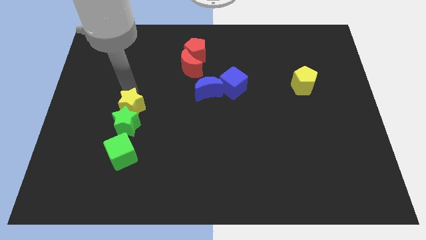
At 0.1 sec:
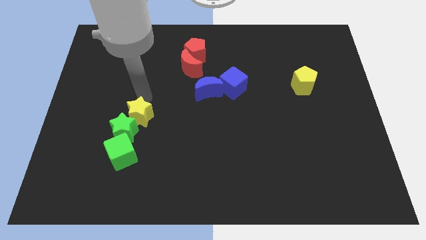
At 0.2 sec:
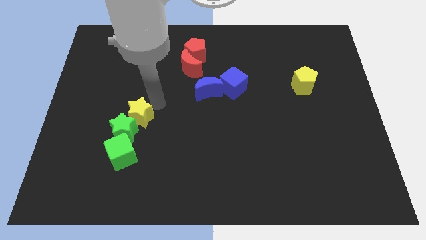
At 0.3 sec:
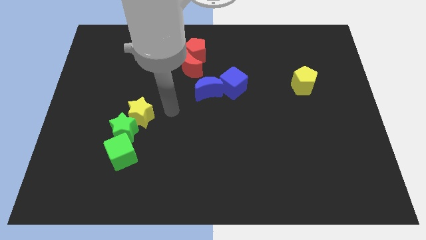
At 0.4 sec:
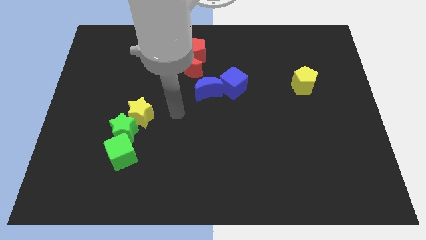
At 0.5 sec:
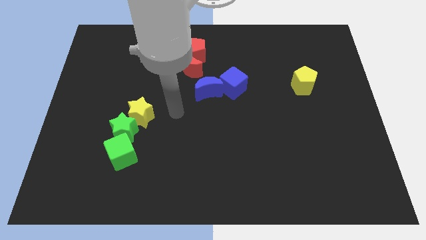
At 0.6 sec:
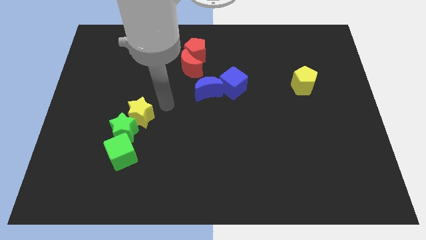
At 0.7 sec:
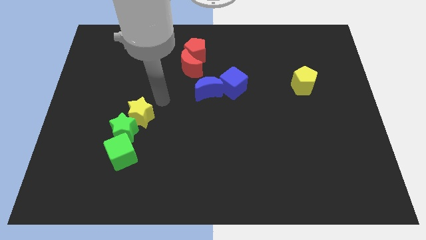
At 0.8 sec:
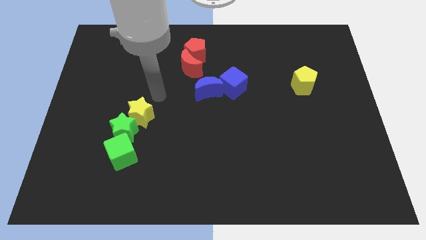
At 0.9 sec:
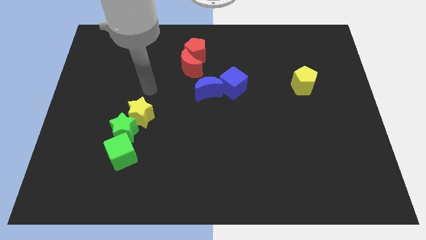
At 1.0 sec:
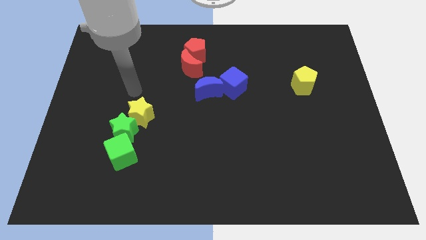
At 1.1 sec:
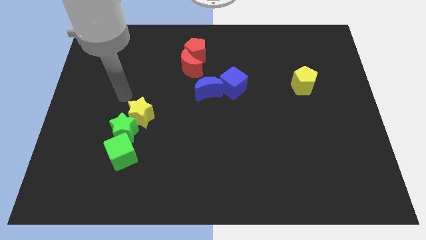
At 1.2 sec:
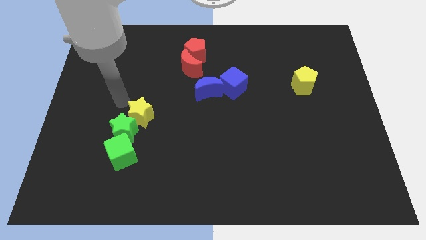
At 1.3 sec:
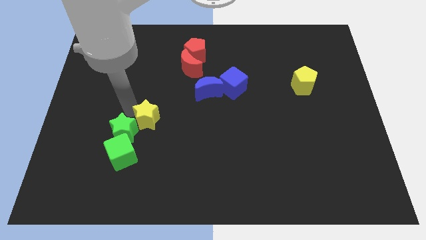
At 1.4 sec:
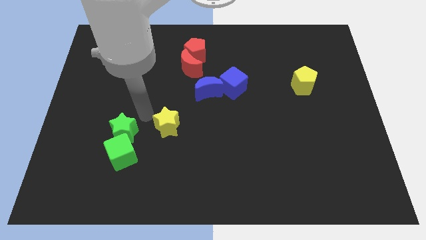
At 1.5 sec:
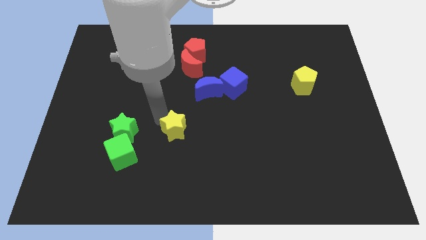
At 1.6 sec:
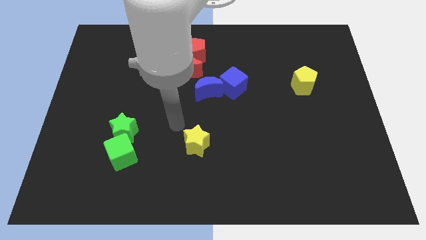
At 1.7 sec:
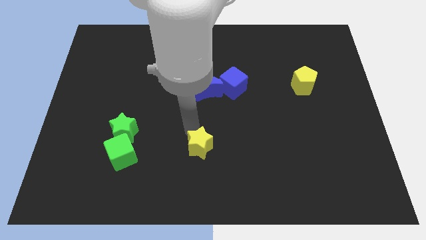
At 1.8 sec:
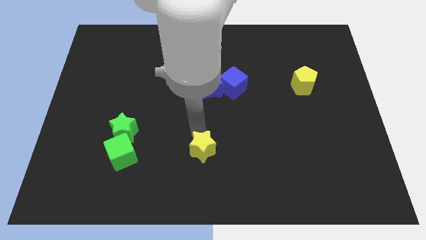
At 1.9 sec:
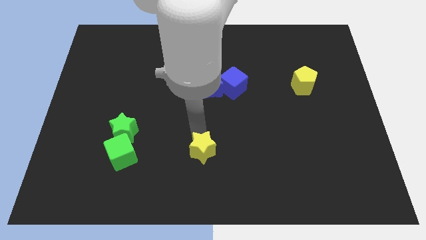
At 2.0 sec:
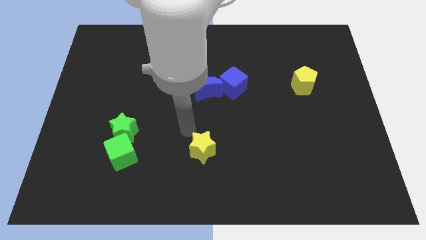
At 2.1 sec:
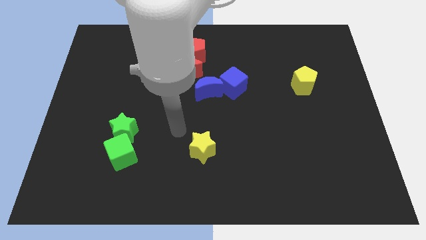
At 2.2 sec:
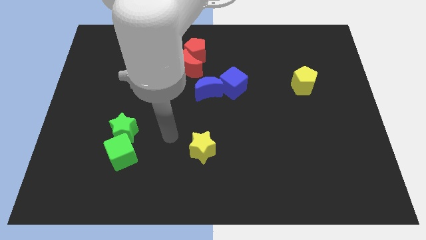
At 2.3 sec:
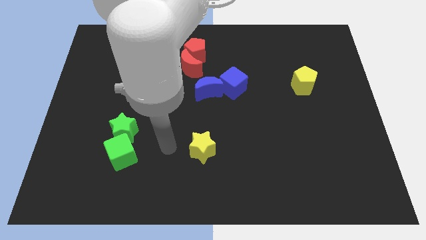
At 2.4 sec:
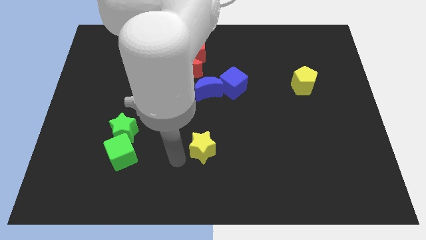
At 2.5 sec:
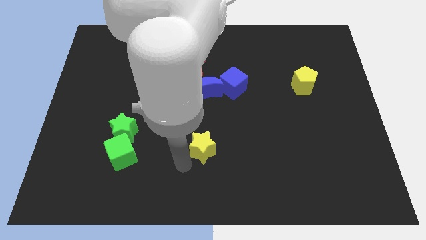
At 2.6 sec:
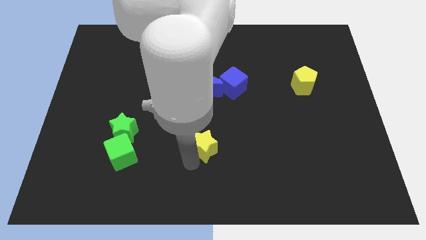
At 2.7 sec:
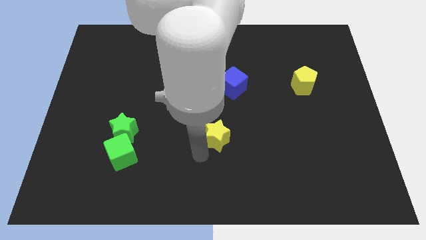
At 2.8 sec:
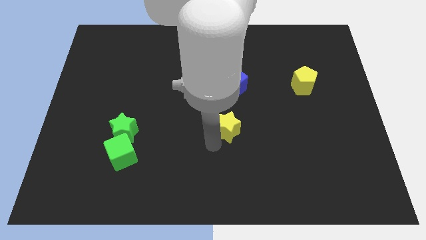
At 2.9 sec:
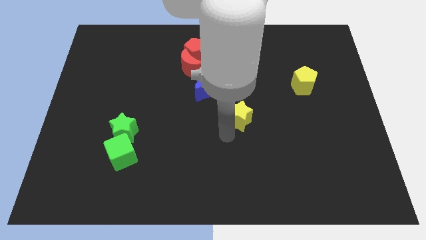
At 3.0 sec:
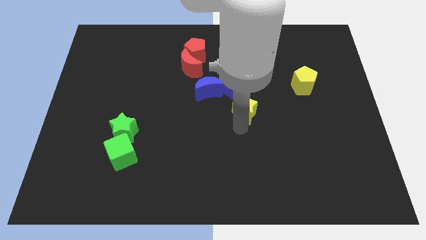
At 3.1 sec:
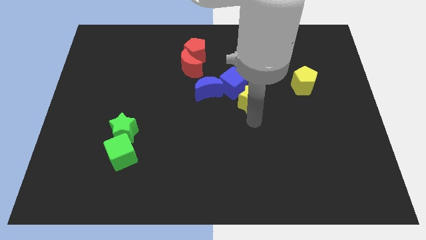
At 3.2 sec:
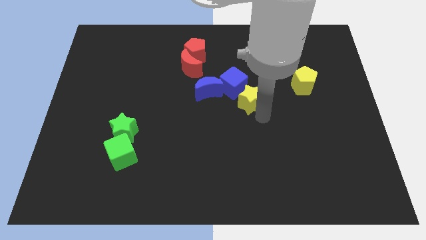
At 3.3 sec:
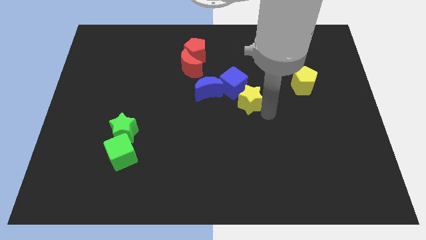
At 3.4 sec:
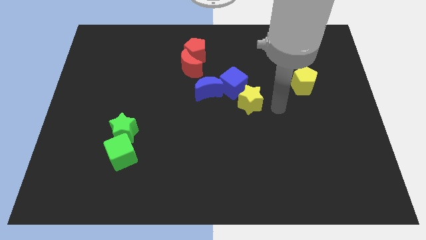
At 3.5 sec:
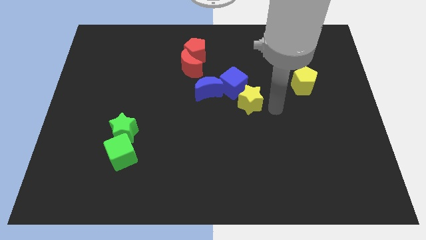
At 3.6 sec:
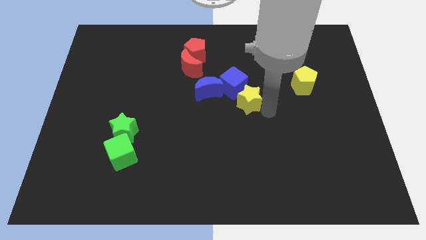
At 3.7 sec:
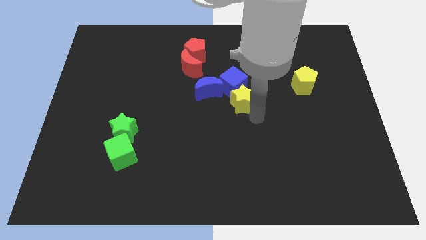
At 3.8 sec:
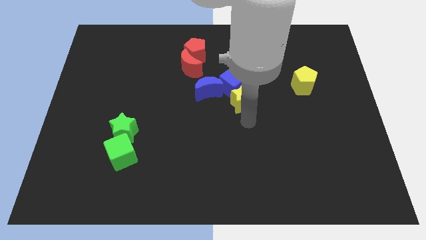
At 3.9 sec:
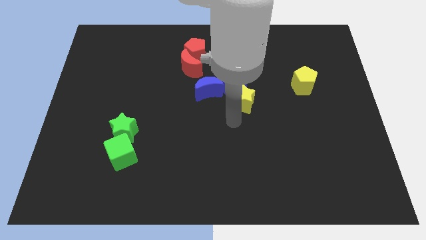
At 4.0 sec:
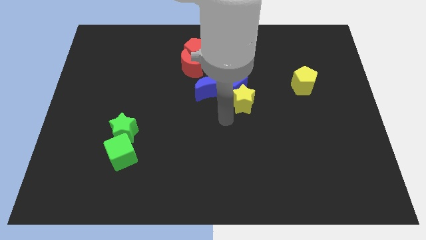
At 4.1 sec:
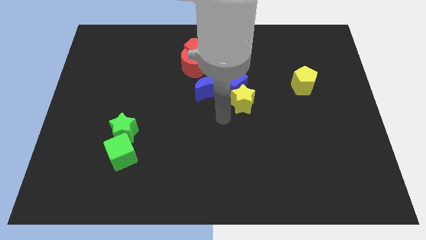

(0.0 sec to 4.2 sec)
push the yellow star close into the blue cube

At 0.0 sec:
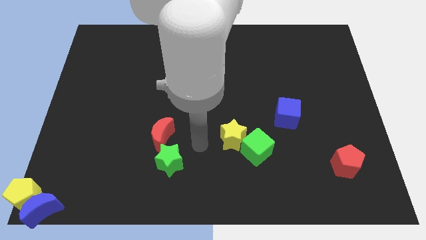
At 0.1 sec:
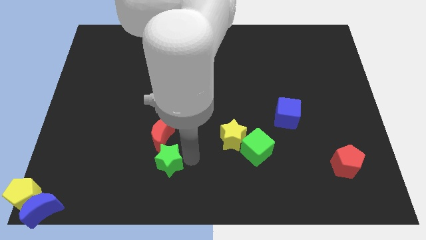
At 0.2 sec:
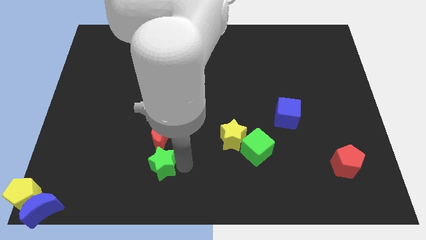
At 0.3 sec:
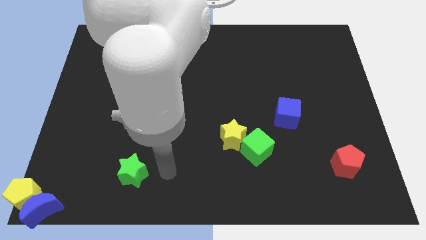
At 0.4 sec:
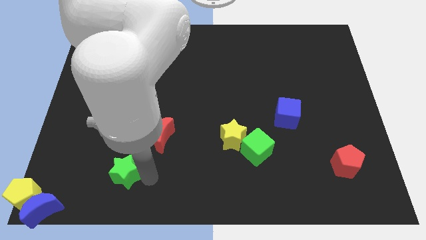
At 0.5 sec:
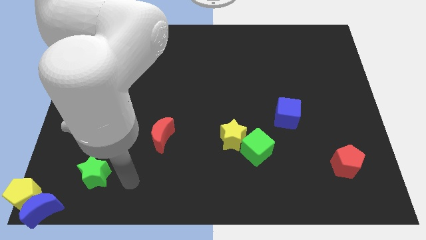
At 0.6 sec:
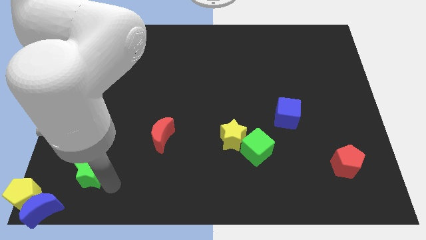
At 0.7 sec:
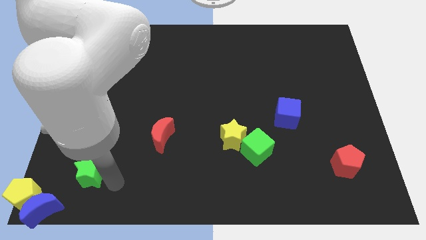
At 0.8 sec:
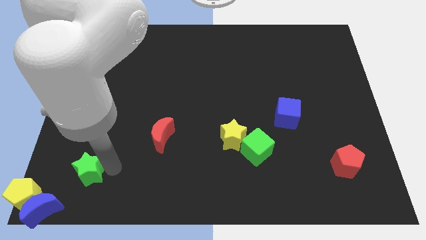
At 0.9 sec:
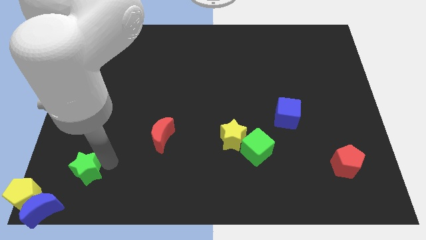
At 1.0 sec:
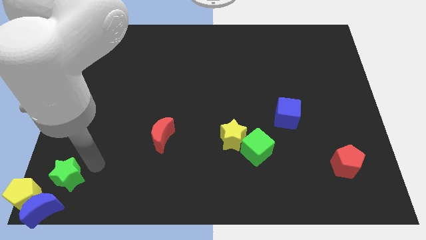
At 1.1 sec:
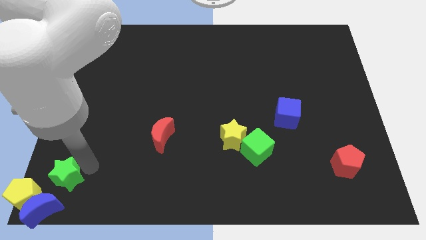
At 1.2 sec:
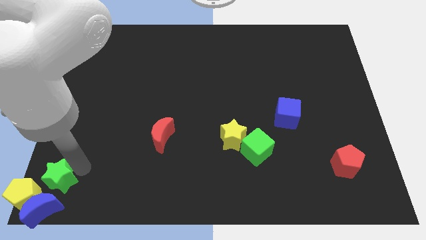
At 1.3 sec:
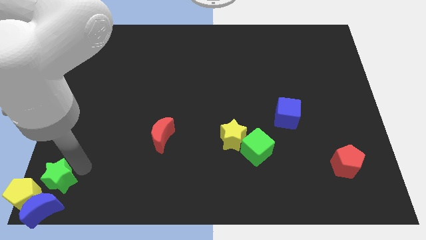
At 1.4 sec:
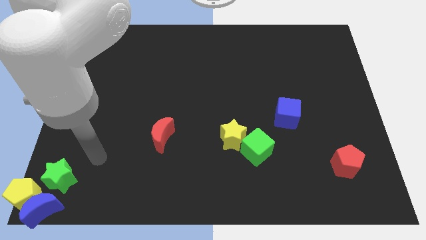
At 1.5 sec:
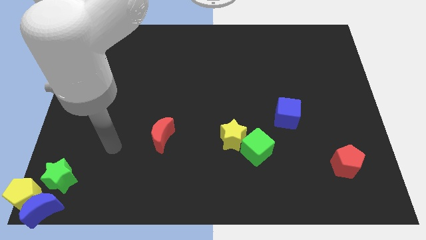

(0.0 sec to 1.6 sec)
push the green star to the right of yellow pentagon

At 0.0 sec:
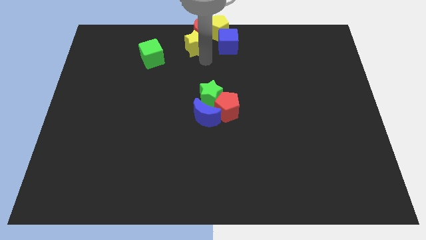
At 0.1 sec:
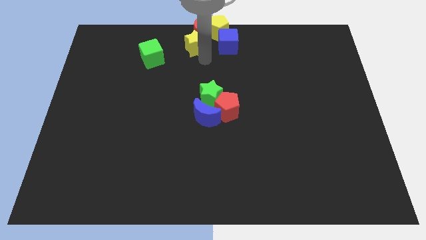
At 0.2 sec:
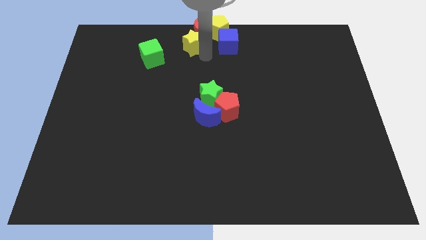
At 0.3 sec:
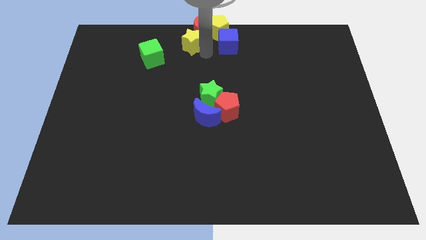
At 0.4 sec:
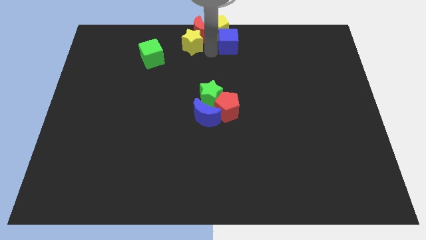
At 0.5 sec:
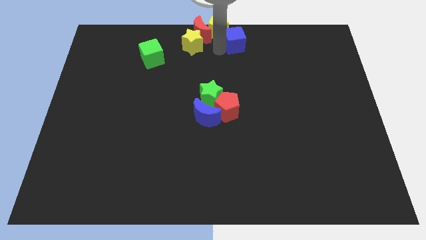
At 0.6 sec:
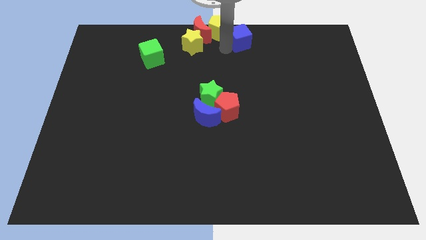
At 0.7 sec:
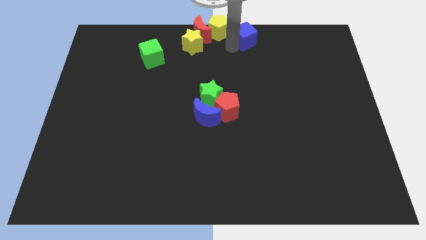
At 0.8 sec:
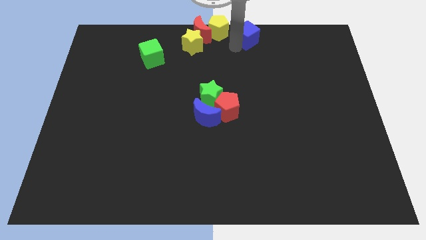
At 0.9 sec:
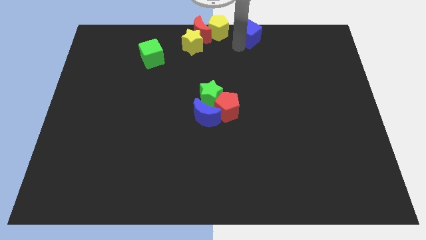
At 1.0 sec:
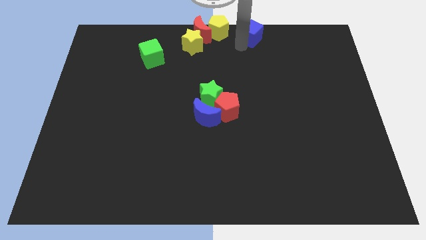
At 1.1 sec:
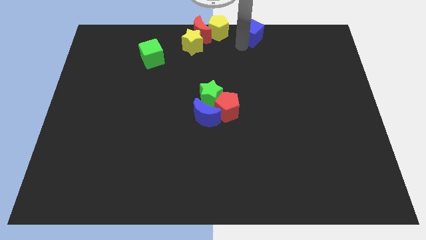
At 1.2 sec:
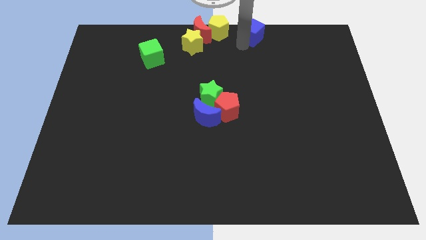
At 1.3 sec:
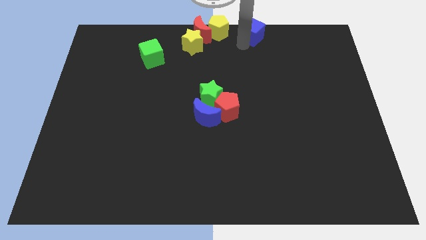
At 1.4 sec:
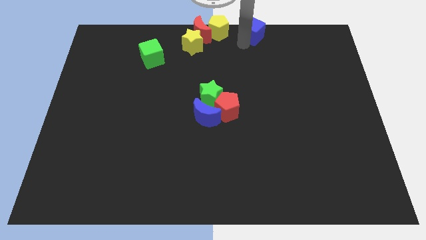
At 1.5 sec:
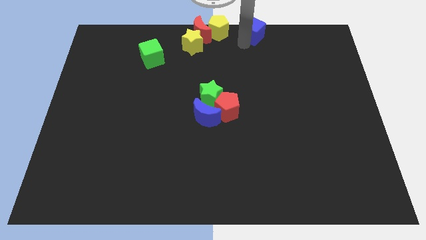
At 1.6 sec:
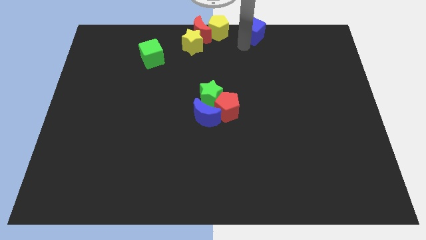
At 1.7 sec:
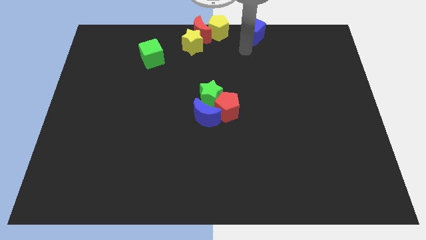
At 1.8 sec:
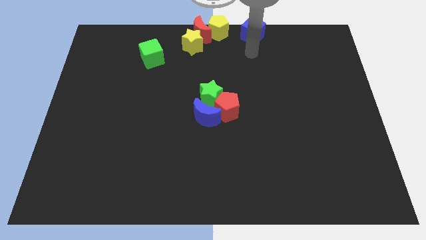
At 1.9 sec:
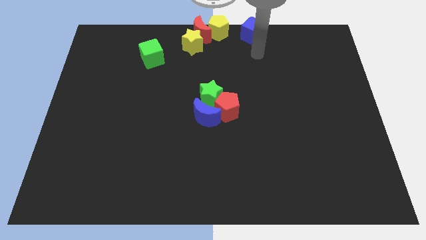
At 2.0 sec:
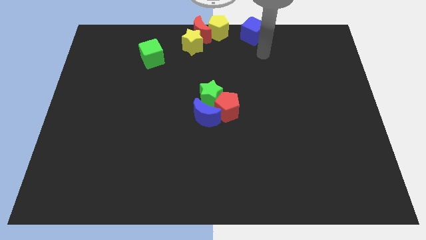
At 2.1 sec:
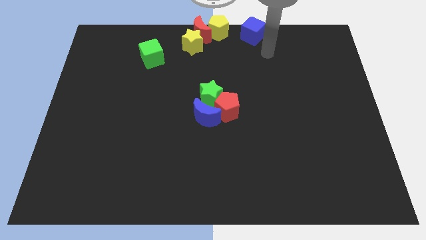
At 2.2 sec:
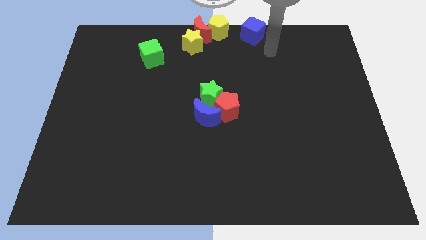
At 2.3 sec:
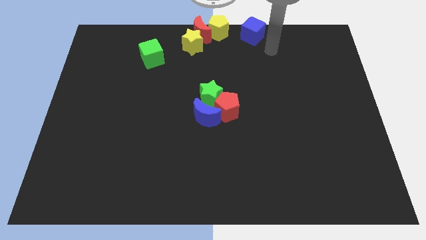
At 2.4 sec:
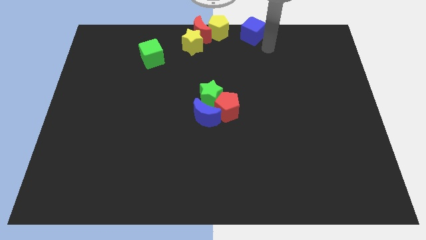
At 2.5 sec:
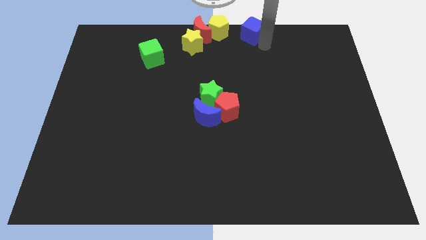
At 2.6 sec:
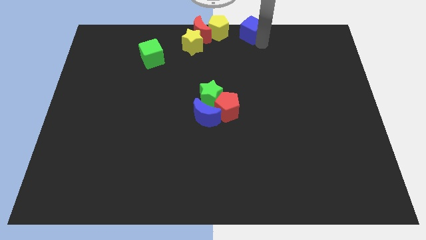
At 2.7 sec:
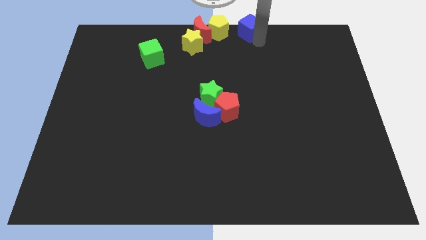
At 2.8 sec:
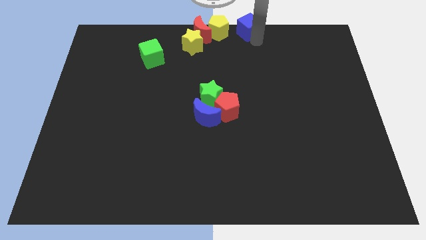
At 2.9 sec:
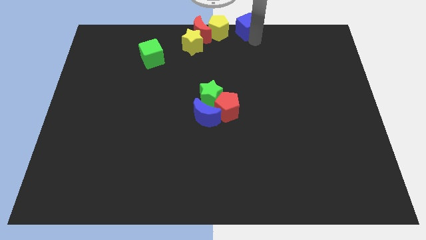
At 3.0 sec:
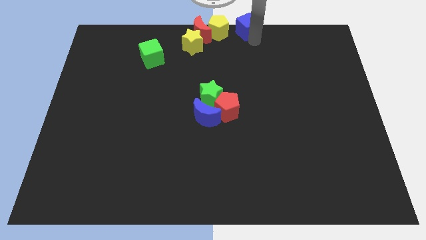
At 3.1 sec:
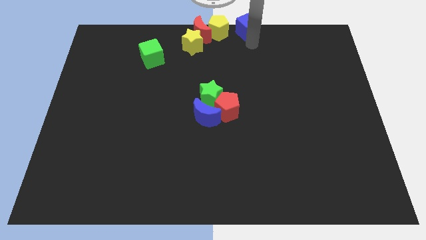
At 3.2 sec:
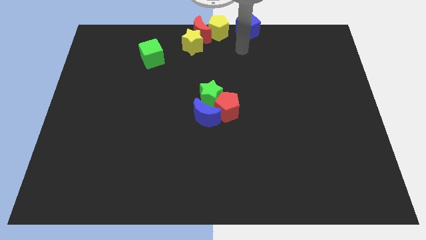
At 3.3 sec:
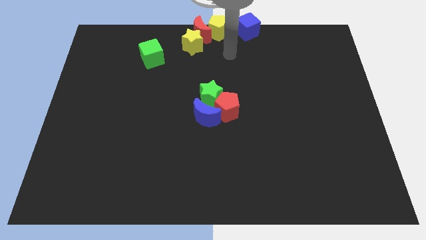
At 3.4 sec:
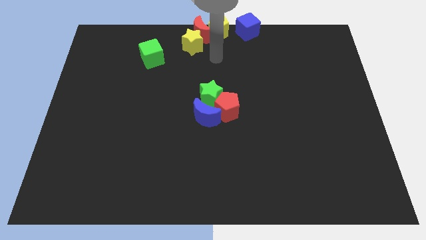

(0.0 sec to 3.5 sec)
place blue cube right to yellow pentagon
